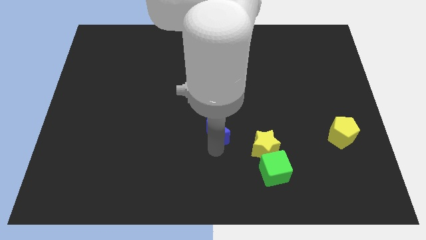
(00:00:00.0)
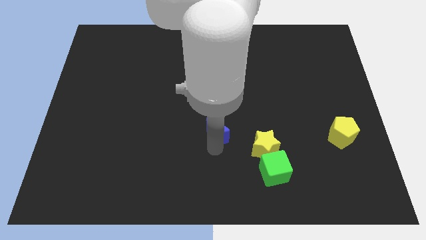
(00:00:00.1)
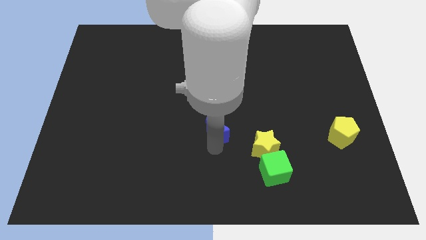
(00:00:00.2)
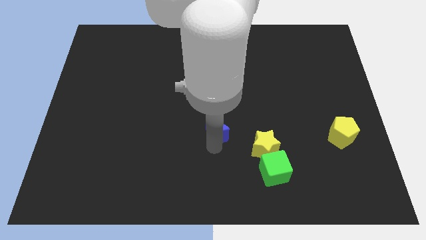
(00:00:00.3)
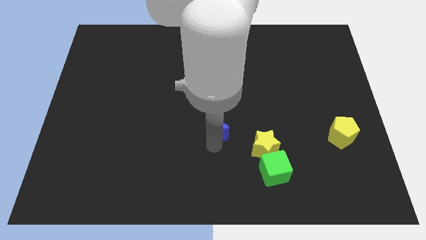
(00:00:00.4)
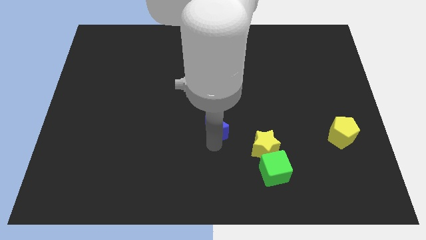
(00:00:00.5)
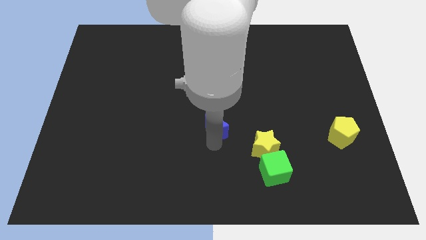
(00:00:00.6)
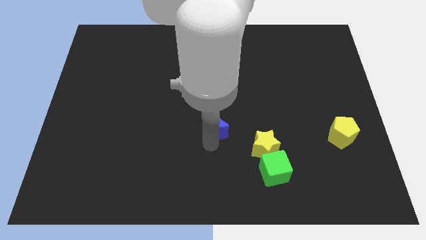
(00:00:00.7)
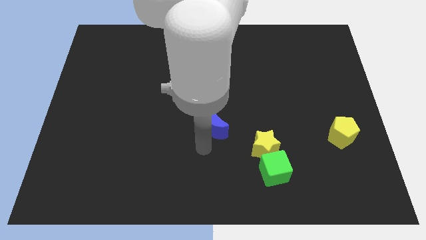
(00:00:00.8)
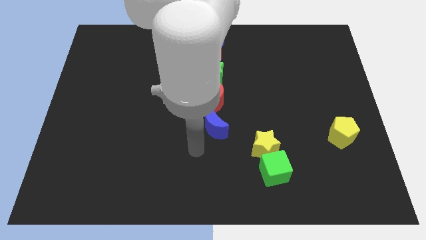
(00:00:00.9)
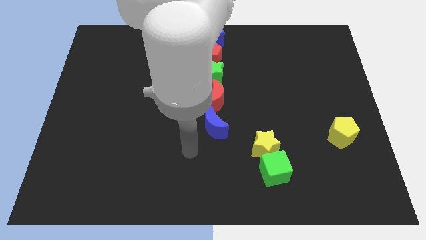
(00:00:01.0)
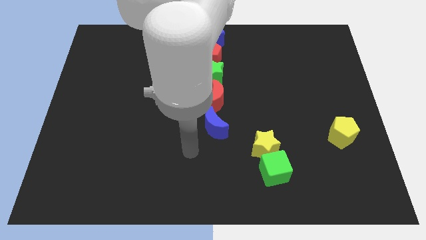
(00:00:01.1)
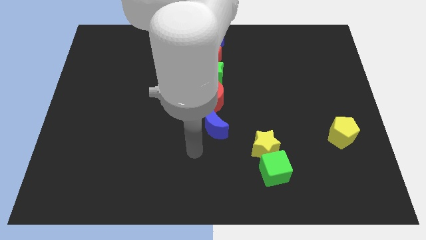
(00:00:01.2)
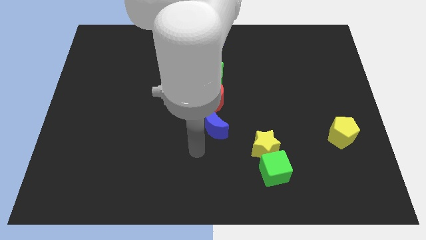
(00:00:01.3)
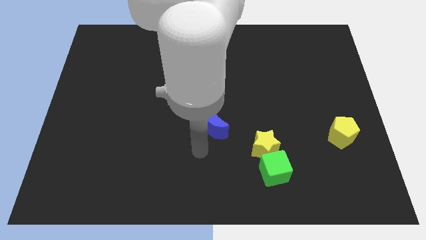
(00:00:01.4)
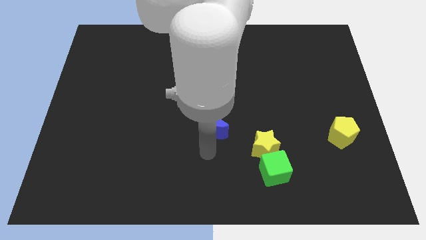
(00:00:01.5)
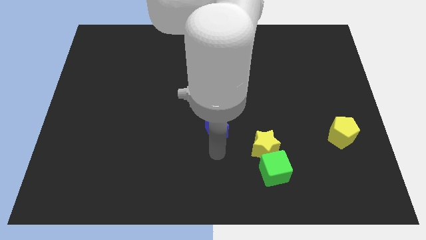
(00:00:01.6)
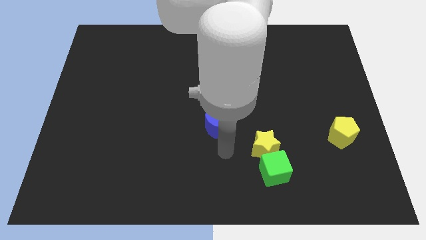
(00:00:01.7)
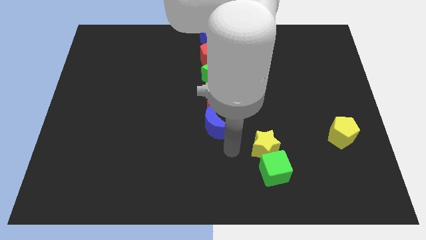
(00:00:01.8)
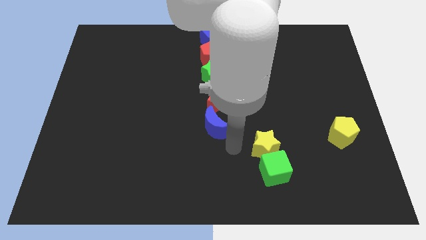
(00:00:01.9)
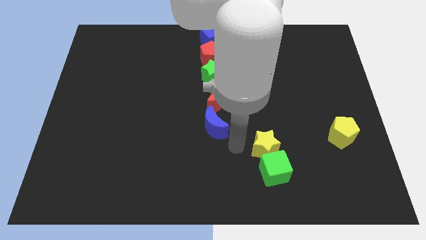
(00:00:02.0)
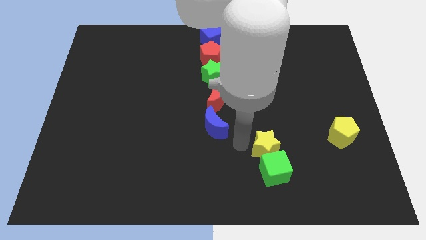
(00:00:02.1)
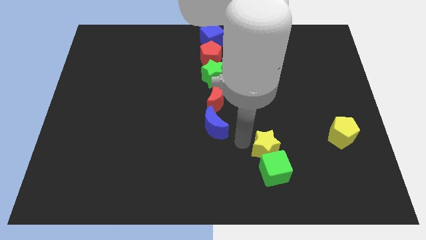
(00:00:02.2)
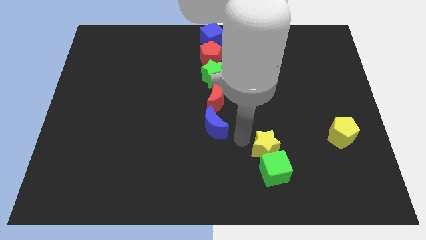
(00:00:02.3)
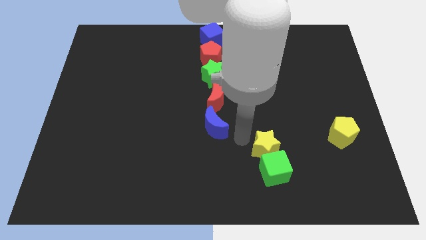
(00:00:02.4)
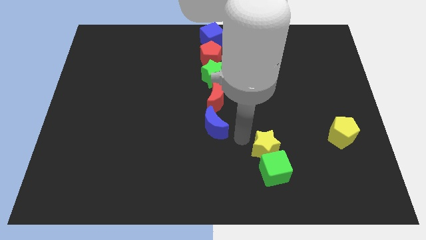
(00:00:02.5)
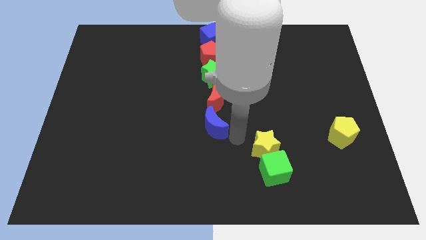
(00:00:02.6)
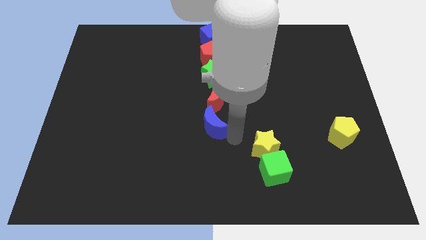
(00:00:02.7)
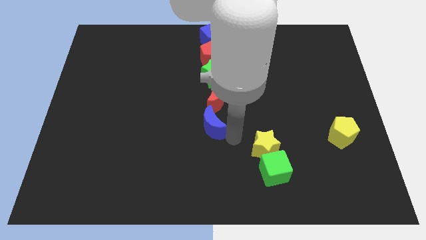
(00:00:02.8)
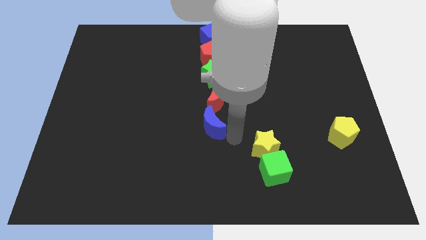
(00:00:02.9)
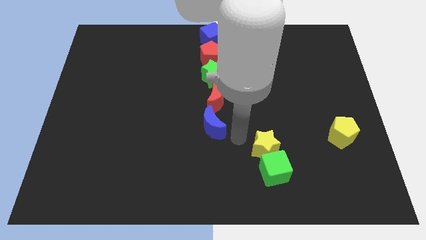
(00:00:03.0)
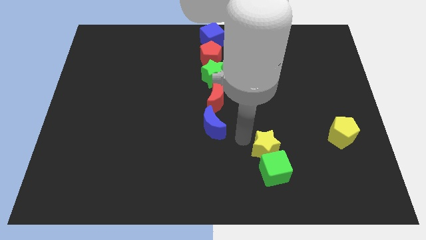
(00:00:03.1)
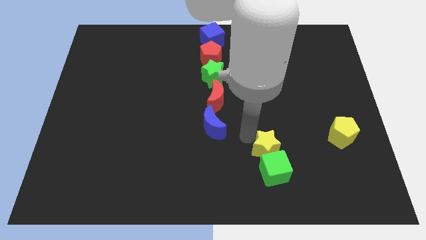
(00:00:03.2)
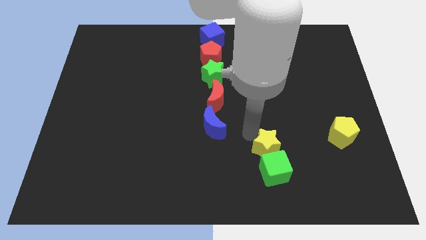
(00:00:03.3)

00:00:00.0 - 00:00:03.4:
move blue moon slightly to top

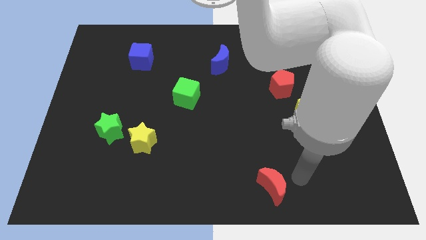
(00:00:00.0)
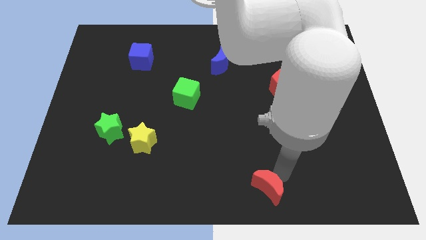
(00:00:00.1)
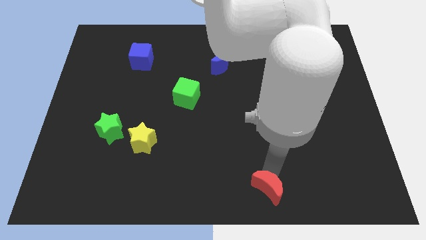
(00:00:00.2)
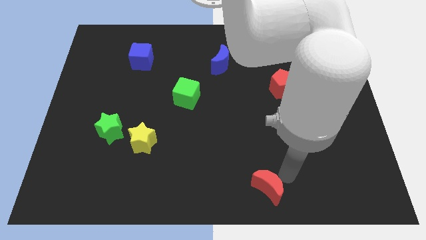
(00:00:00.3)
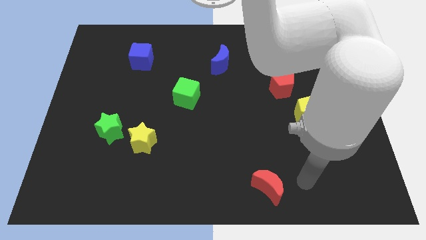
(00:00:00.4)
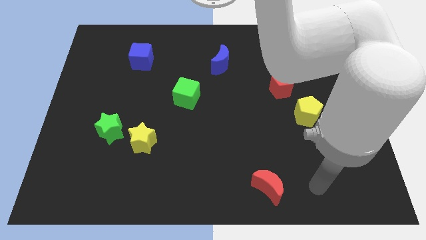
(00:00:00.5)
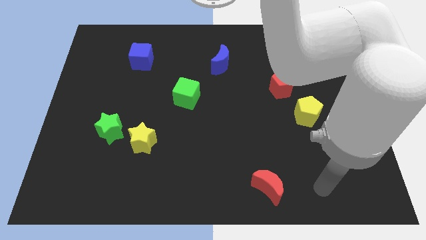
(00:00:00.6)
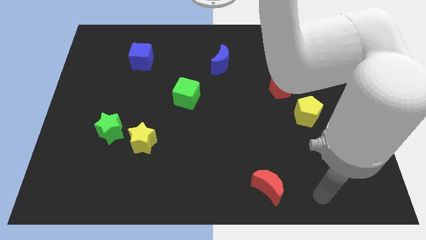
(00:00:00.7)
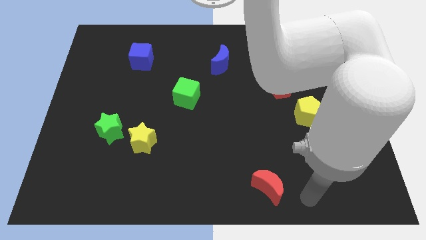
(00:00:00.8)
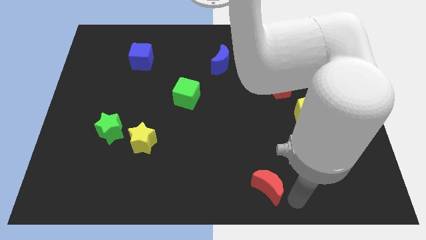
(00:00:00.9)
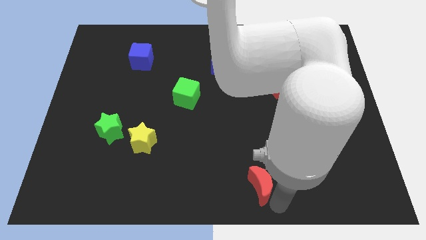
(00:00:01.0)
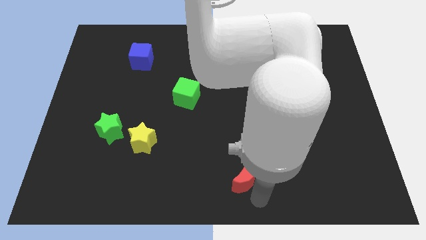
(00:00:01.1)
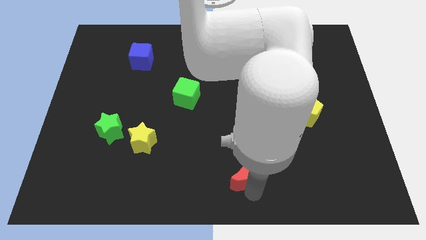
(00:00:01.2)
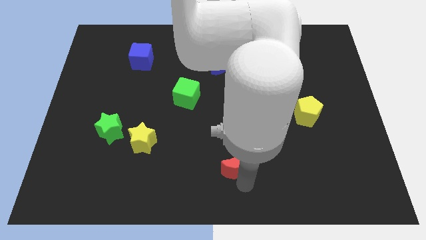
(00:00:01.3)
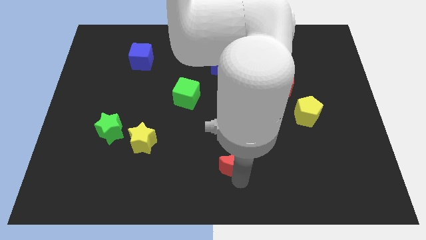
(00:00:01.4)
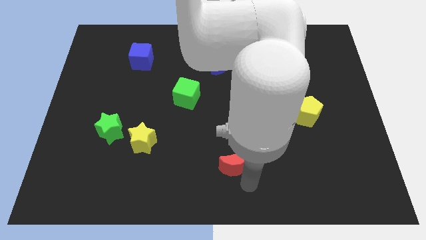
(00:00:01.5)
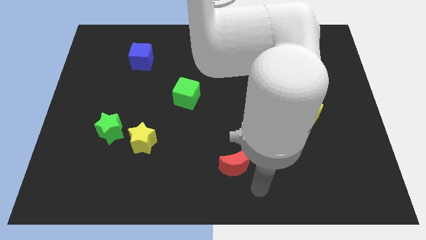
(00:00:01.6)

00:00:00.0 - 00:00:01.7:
move red moon slightly up

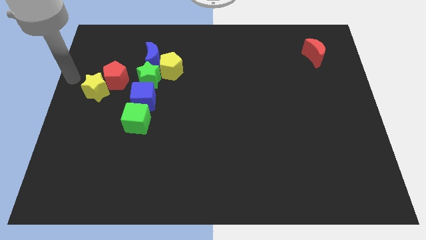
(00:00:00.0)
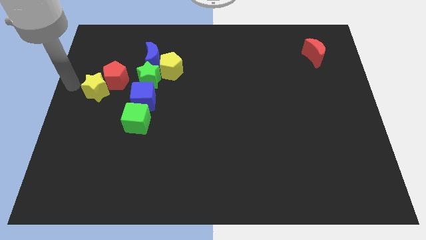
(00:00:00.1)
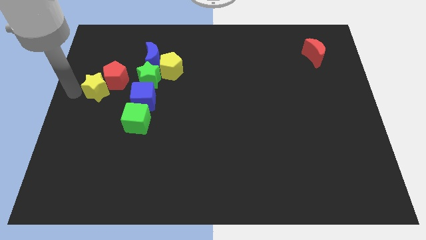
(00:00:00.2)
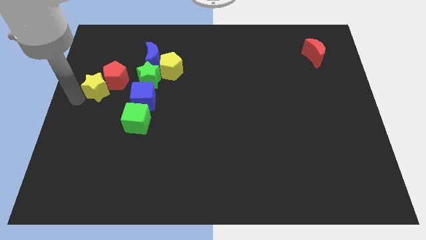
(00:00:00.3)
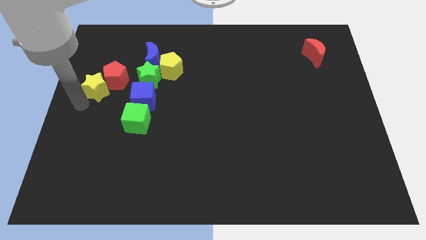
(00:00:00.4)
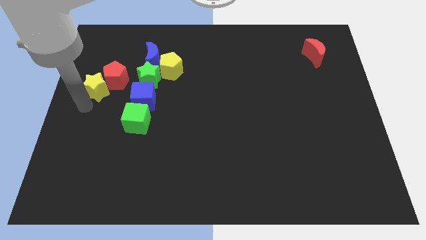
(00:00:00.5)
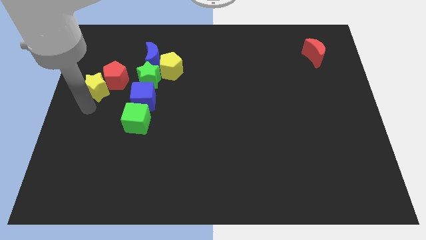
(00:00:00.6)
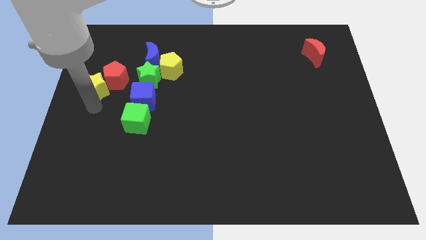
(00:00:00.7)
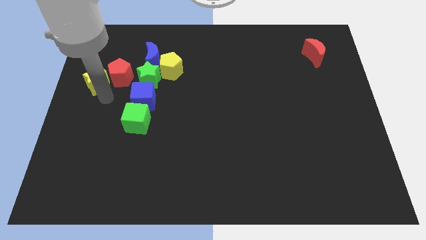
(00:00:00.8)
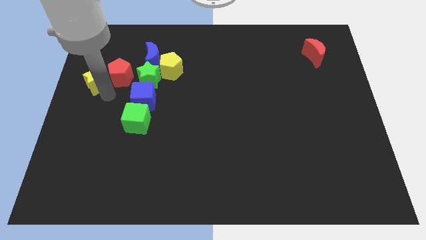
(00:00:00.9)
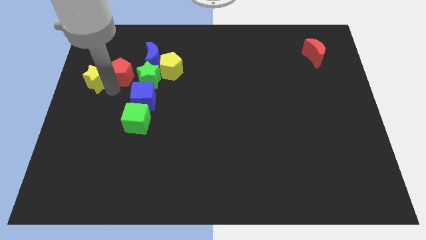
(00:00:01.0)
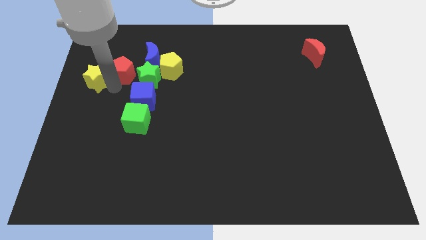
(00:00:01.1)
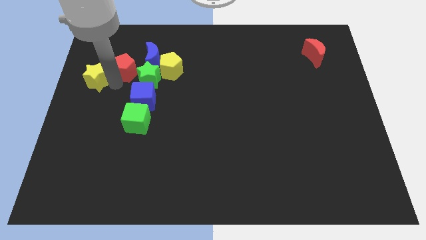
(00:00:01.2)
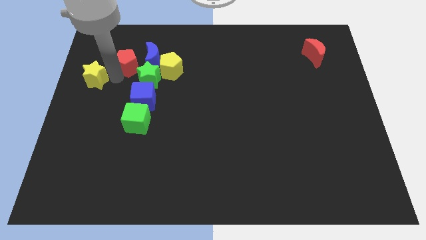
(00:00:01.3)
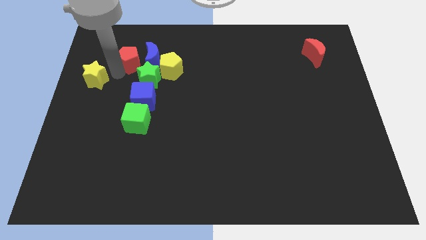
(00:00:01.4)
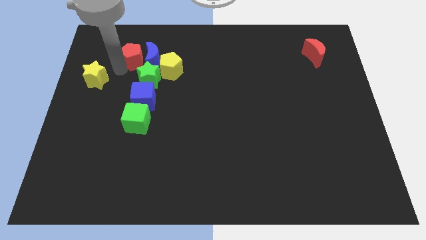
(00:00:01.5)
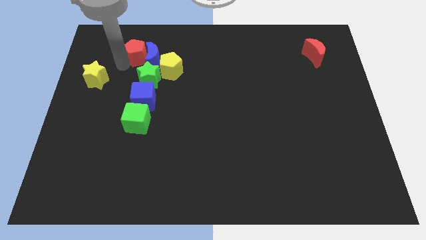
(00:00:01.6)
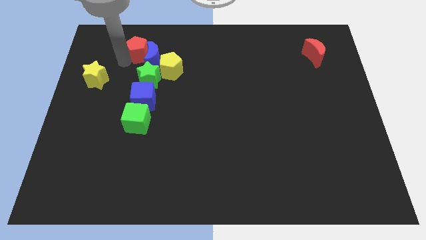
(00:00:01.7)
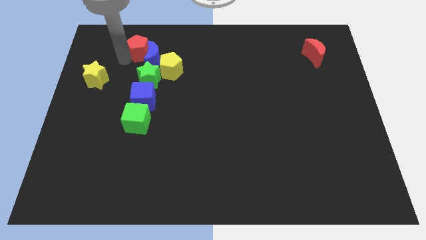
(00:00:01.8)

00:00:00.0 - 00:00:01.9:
separate the red pentagon from the yellow star

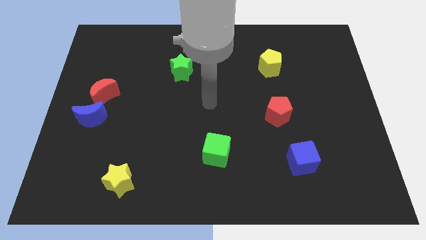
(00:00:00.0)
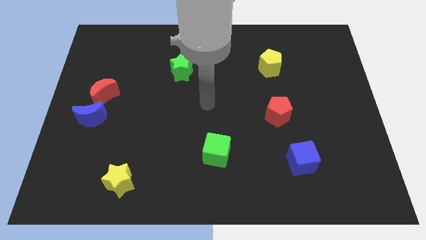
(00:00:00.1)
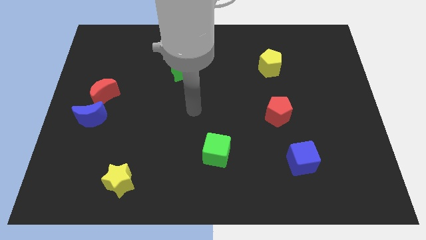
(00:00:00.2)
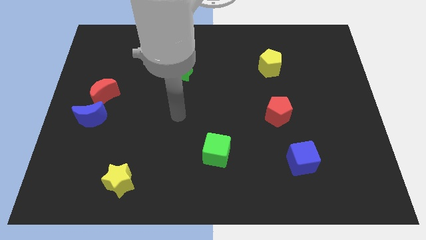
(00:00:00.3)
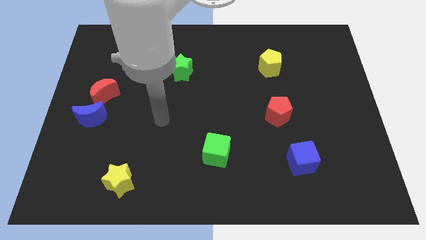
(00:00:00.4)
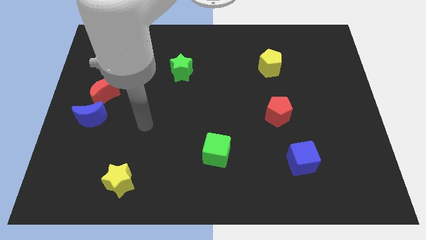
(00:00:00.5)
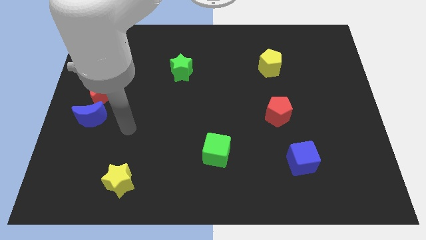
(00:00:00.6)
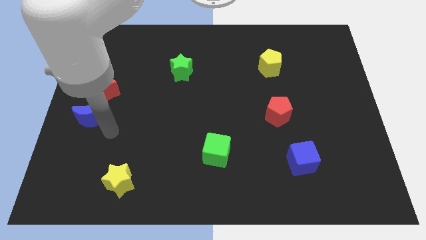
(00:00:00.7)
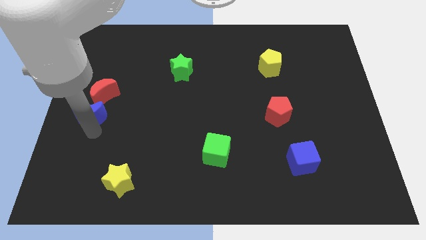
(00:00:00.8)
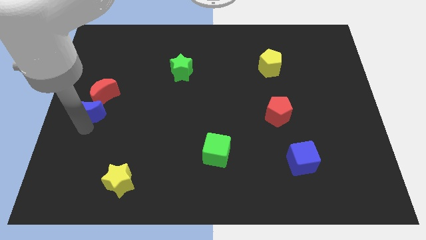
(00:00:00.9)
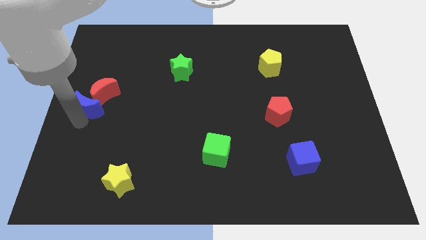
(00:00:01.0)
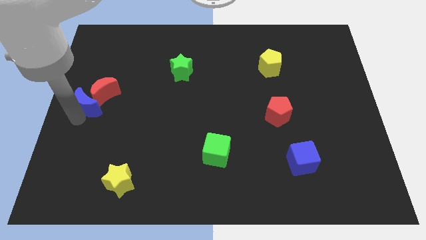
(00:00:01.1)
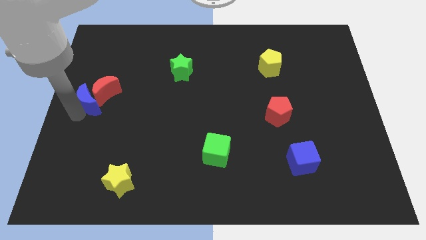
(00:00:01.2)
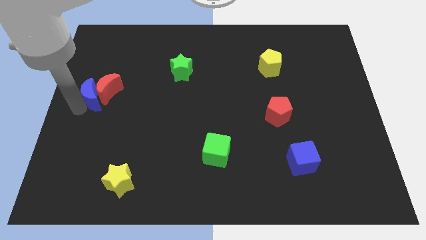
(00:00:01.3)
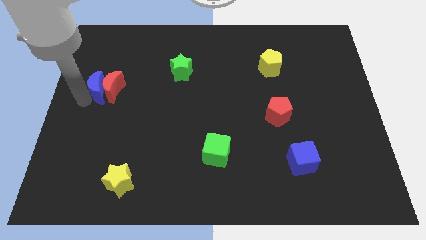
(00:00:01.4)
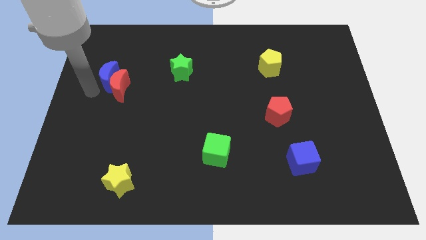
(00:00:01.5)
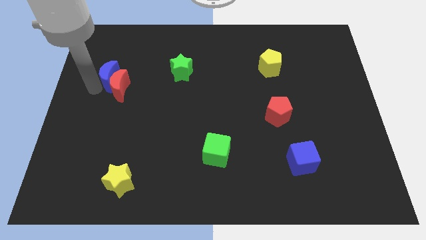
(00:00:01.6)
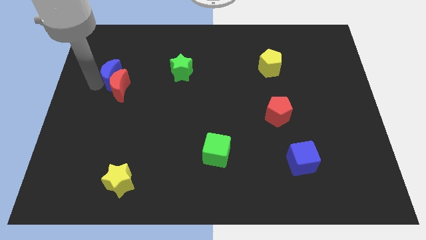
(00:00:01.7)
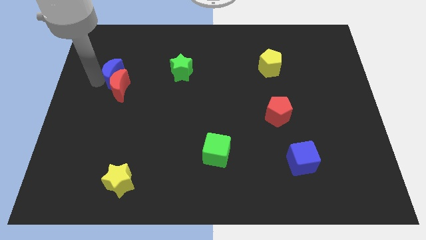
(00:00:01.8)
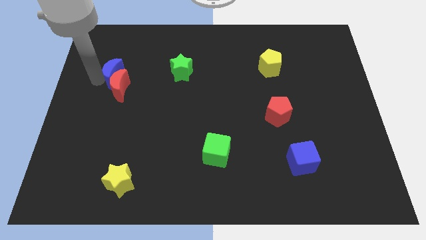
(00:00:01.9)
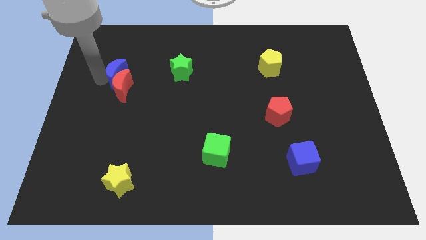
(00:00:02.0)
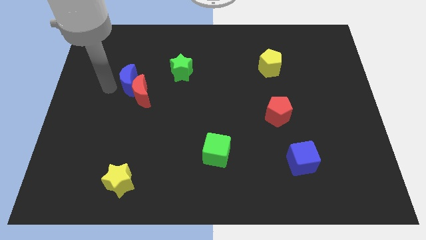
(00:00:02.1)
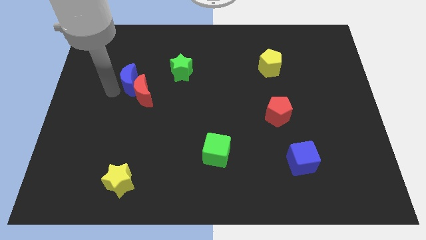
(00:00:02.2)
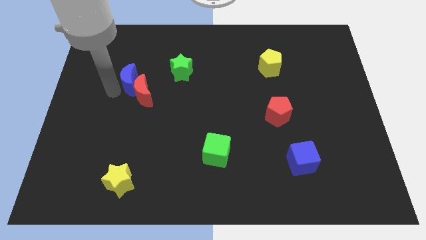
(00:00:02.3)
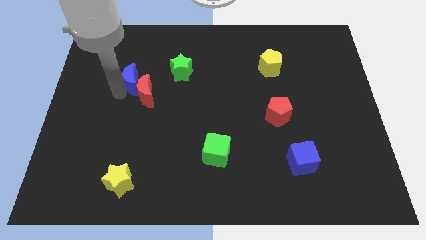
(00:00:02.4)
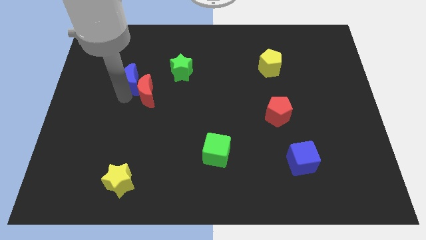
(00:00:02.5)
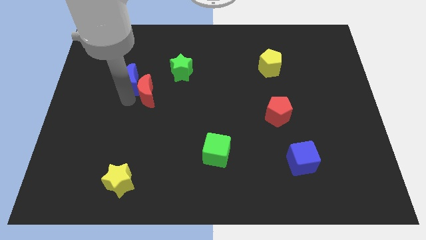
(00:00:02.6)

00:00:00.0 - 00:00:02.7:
move blue crescent and red crescent towards the green star
